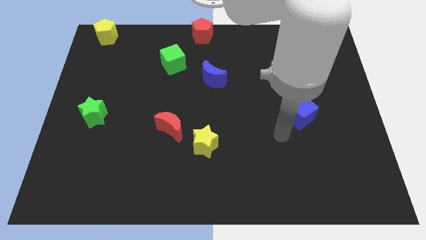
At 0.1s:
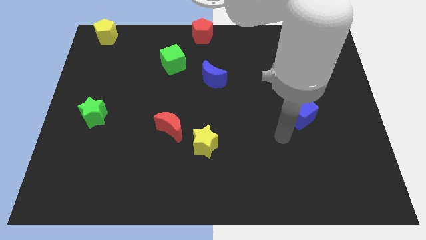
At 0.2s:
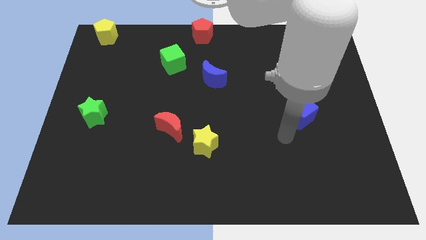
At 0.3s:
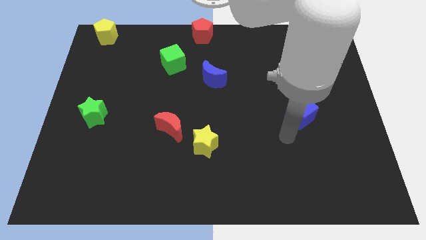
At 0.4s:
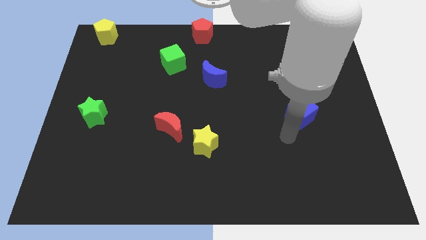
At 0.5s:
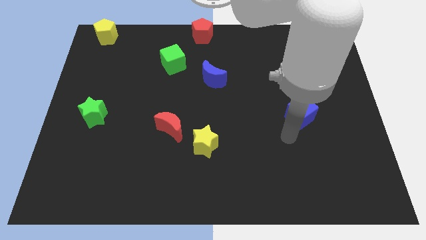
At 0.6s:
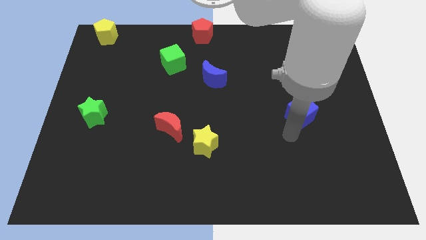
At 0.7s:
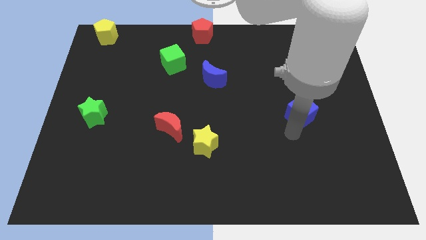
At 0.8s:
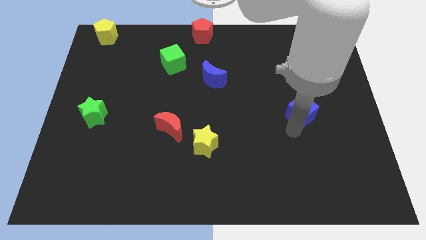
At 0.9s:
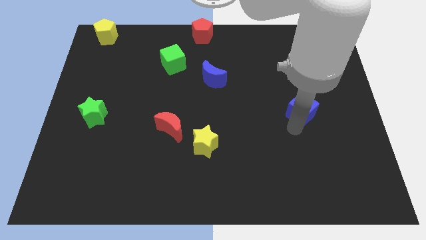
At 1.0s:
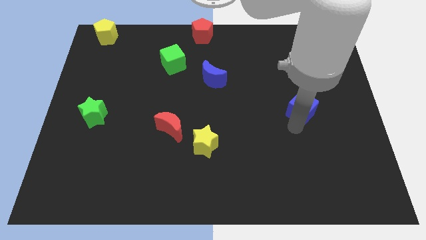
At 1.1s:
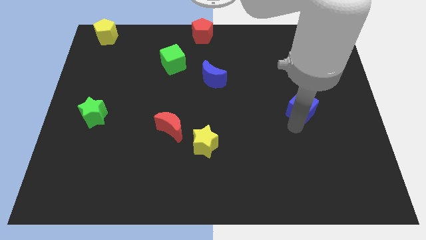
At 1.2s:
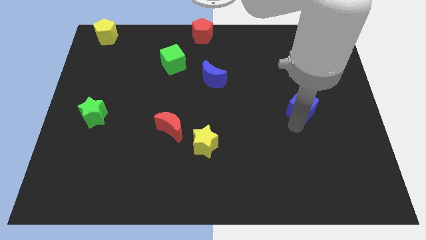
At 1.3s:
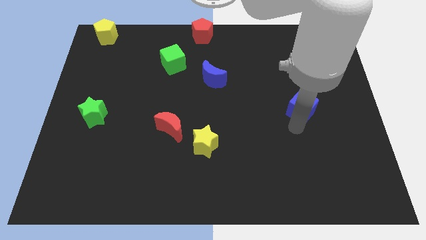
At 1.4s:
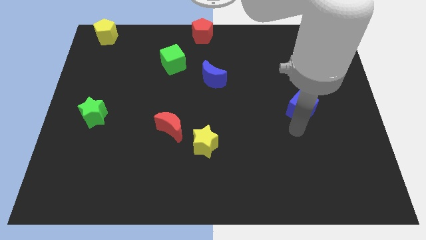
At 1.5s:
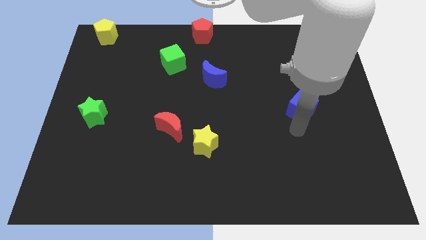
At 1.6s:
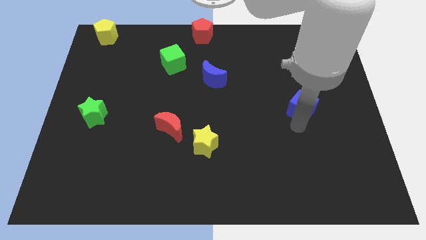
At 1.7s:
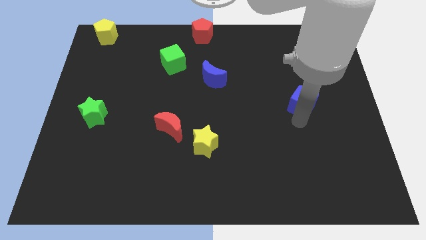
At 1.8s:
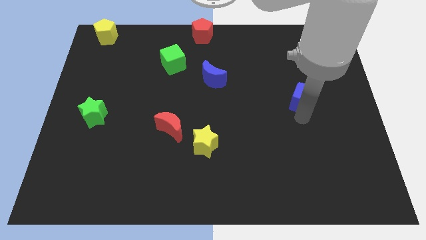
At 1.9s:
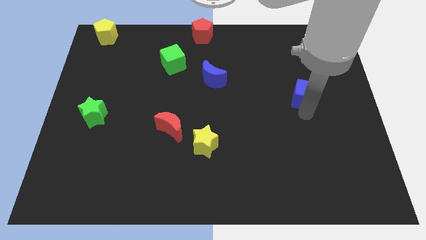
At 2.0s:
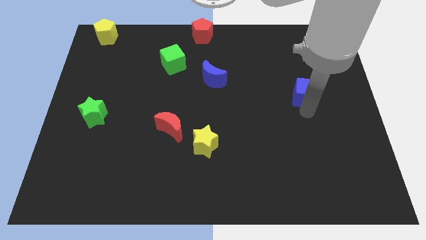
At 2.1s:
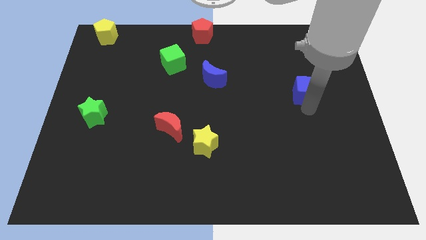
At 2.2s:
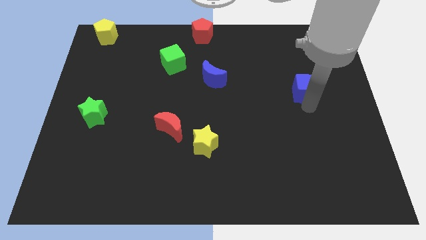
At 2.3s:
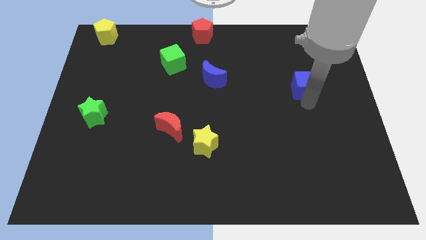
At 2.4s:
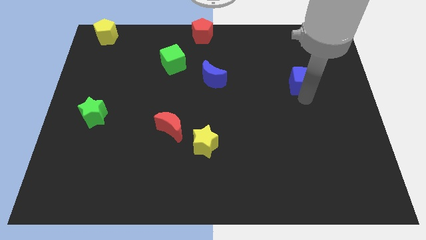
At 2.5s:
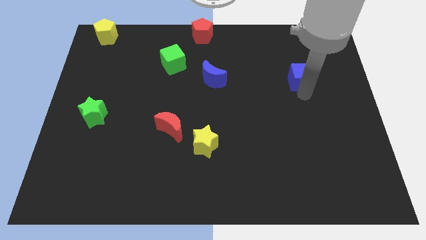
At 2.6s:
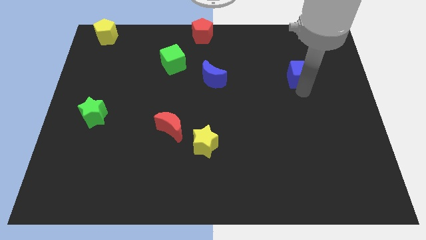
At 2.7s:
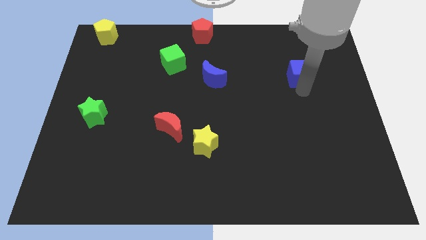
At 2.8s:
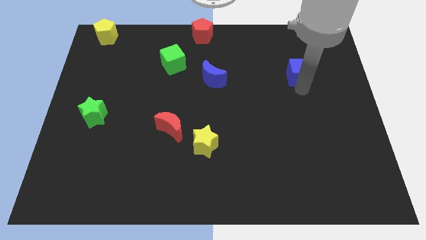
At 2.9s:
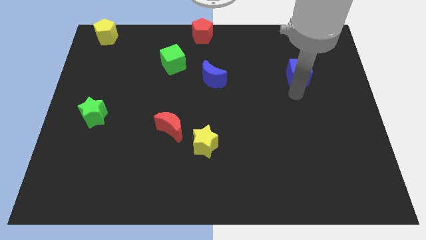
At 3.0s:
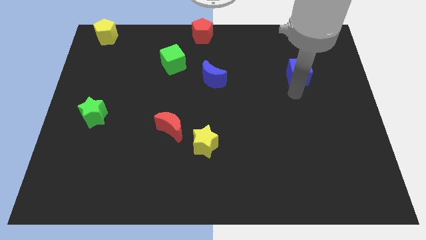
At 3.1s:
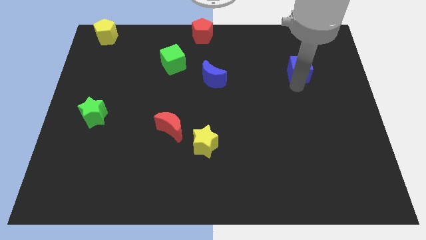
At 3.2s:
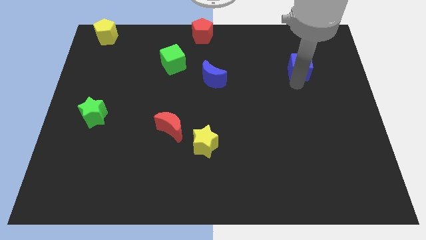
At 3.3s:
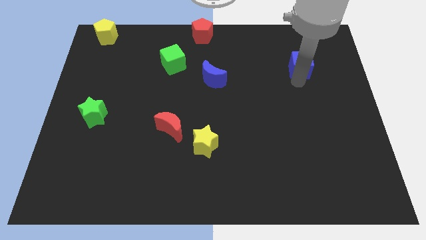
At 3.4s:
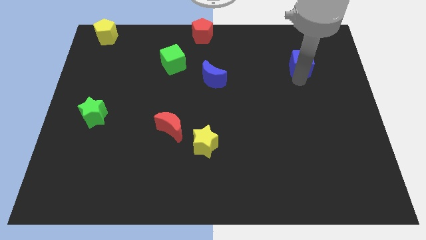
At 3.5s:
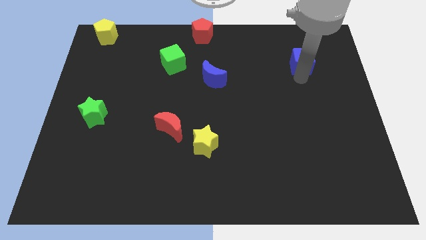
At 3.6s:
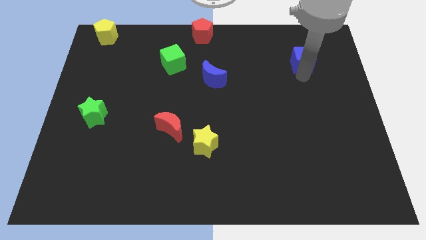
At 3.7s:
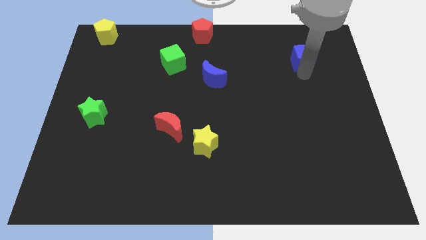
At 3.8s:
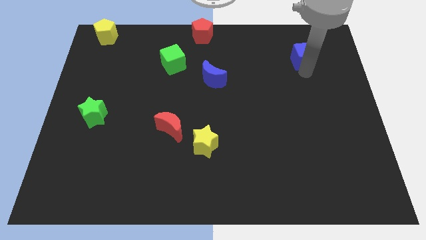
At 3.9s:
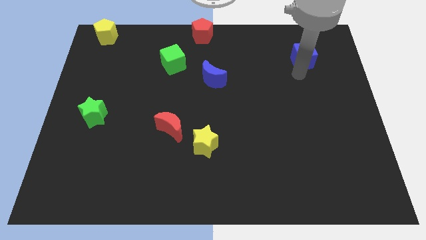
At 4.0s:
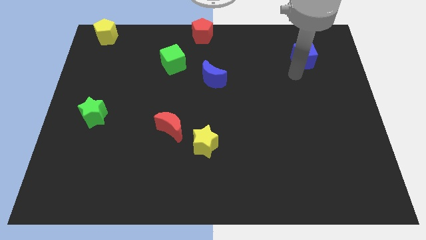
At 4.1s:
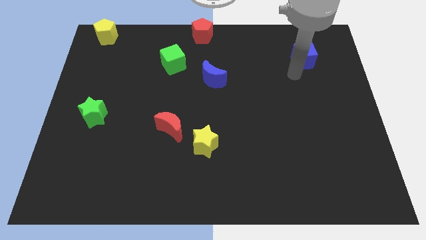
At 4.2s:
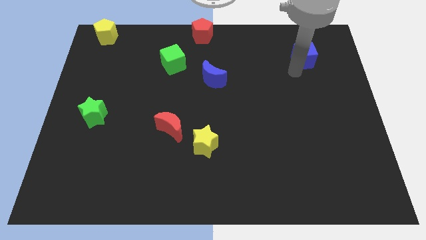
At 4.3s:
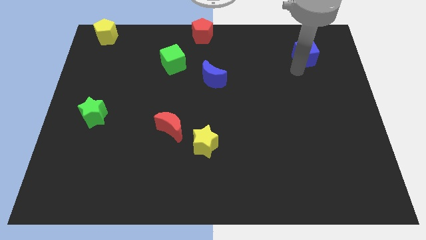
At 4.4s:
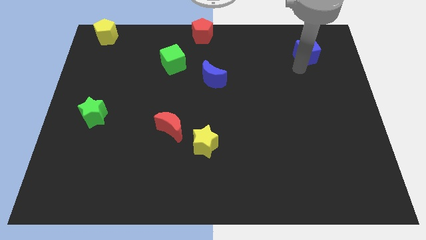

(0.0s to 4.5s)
slide the blue cube towards the top right side of the board

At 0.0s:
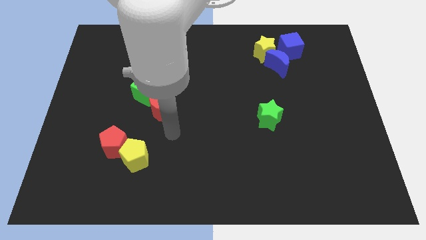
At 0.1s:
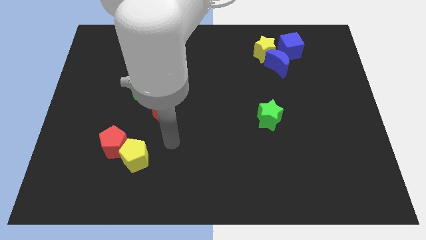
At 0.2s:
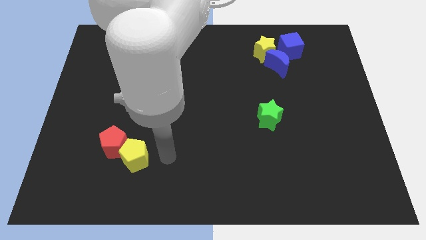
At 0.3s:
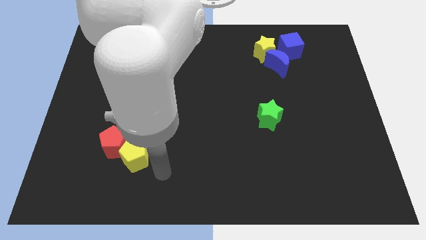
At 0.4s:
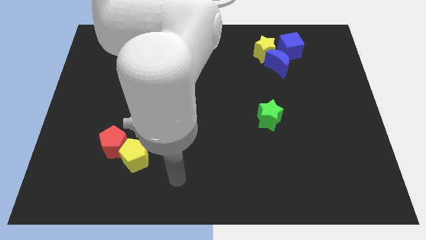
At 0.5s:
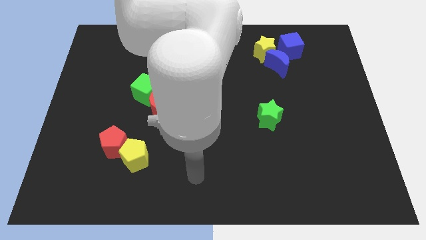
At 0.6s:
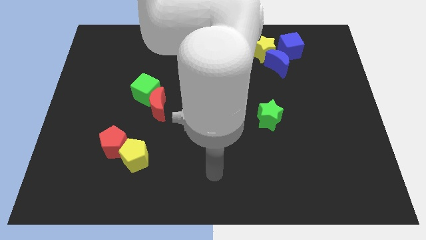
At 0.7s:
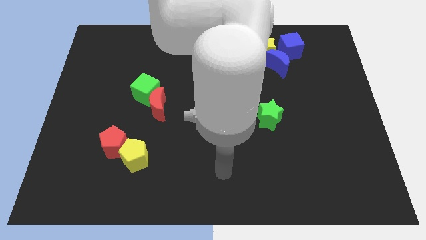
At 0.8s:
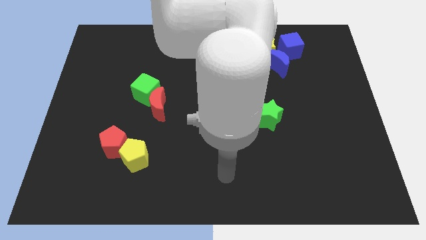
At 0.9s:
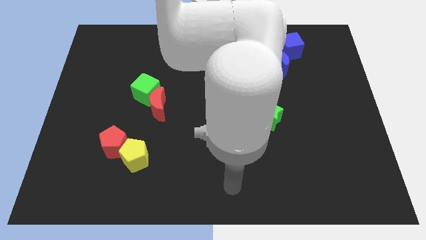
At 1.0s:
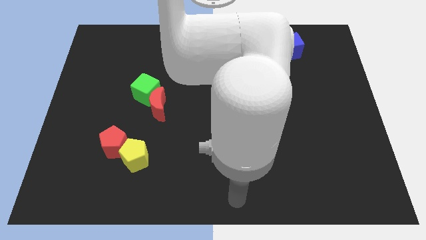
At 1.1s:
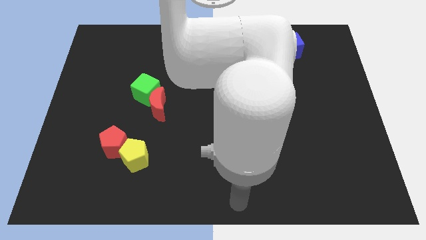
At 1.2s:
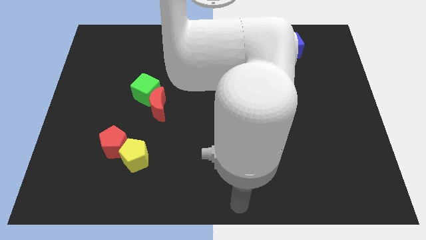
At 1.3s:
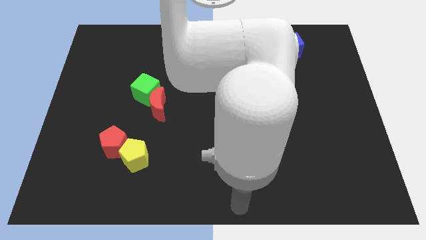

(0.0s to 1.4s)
point the arm at the bottom center of the board

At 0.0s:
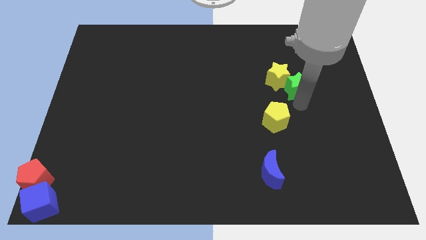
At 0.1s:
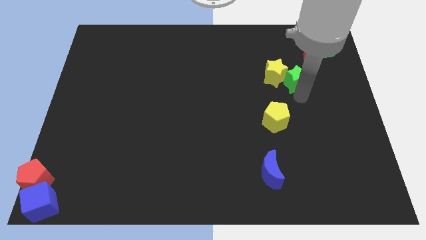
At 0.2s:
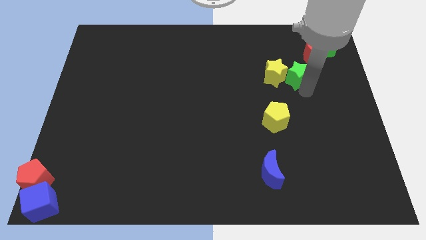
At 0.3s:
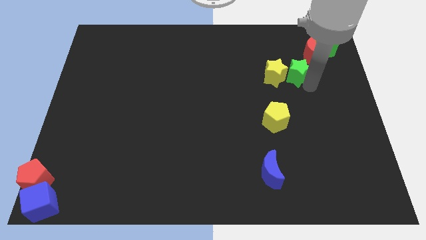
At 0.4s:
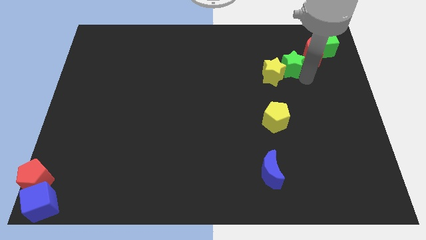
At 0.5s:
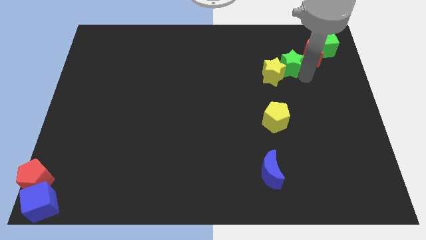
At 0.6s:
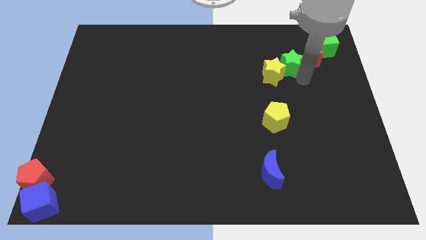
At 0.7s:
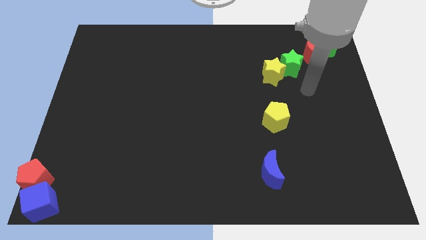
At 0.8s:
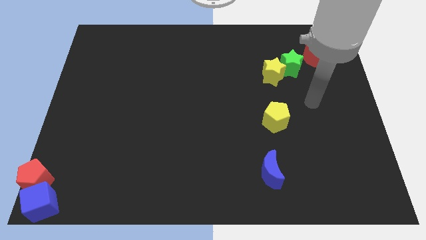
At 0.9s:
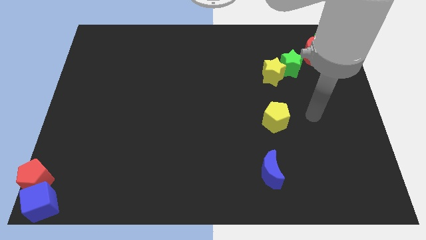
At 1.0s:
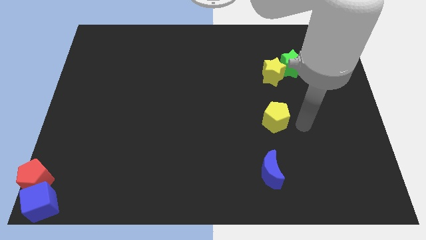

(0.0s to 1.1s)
place the green star diagonally top right to the red moon

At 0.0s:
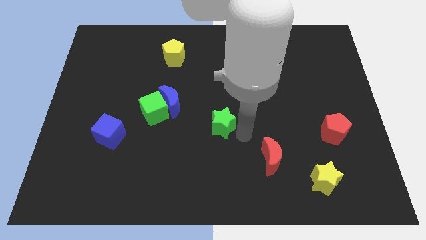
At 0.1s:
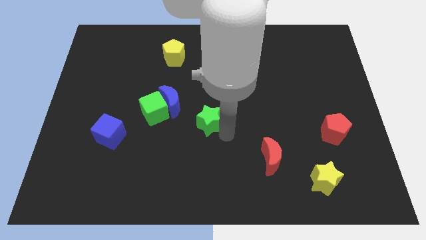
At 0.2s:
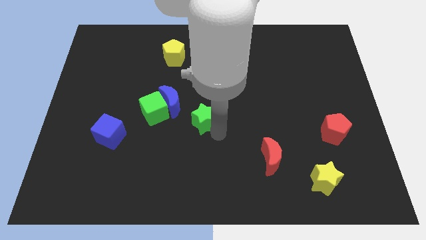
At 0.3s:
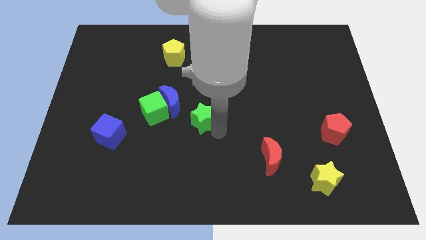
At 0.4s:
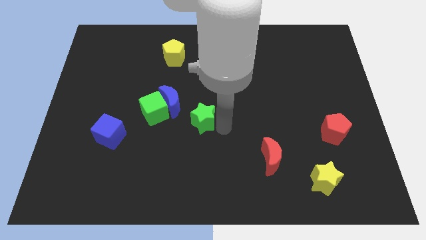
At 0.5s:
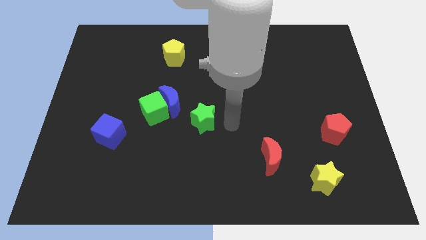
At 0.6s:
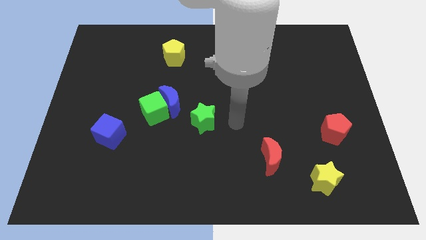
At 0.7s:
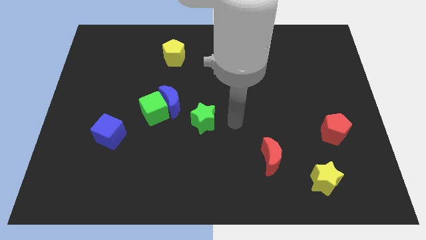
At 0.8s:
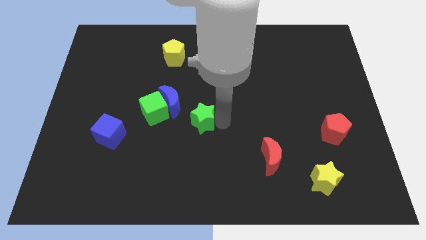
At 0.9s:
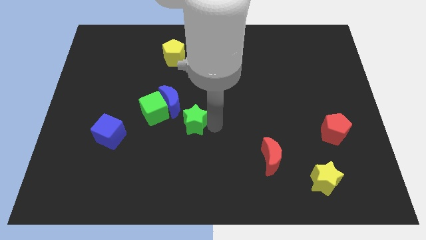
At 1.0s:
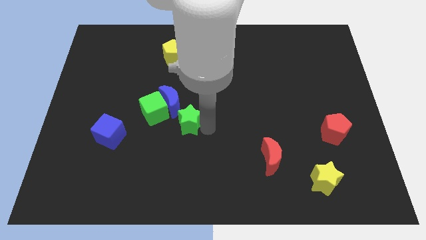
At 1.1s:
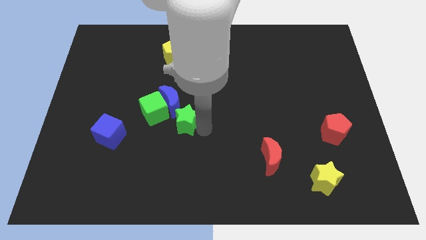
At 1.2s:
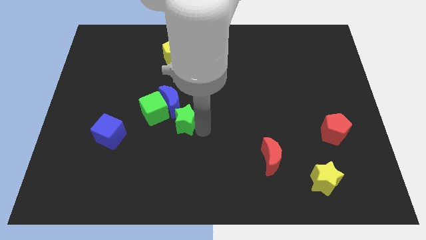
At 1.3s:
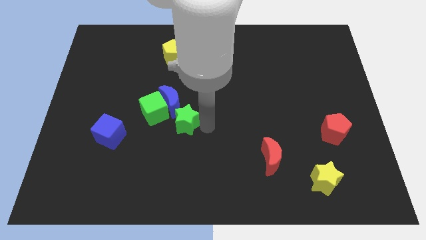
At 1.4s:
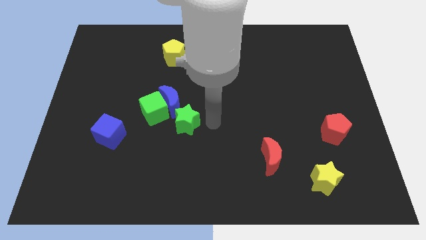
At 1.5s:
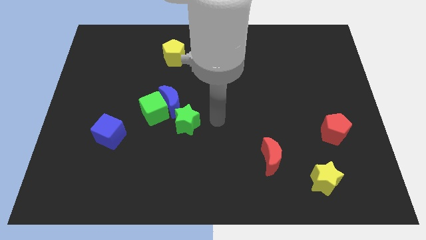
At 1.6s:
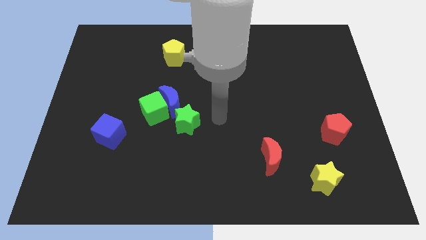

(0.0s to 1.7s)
push the green star slightly towards the green cube

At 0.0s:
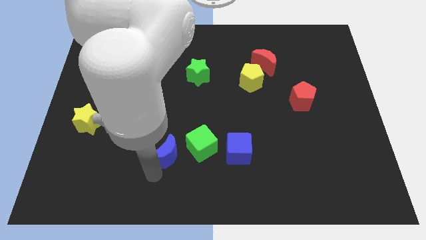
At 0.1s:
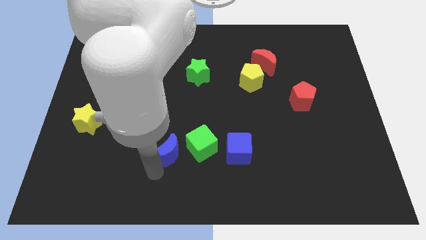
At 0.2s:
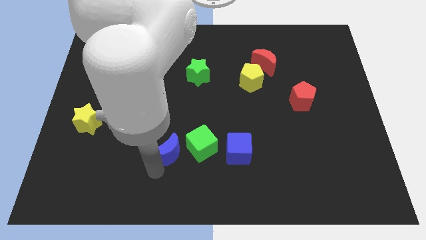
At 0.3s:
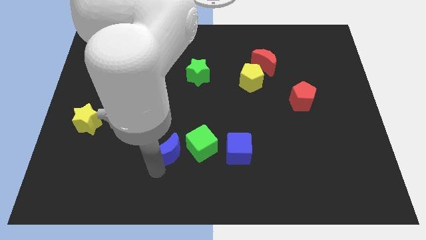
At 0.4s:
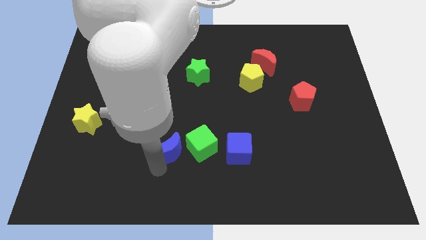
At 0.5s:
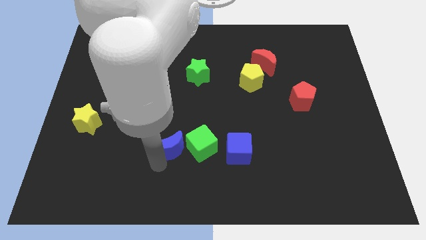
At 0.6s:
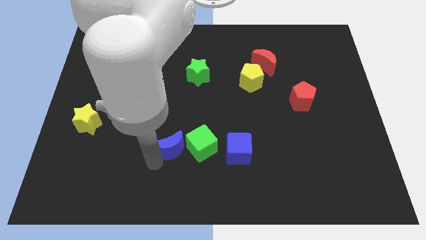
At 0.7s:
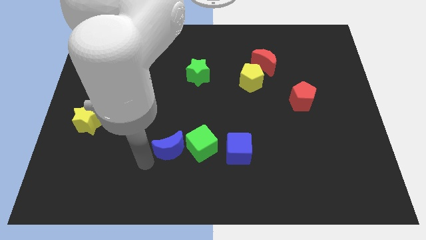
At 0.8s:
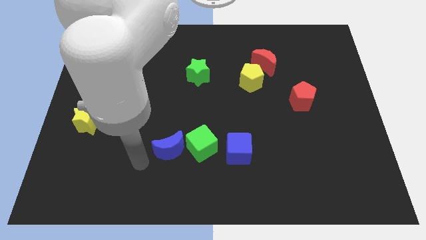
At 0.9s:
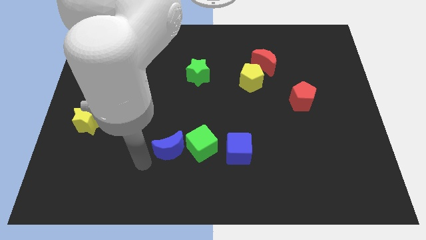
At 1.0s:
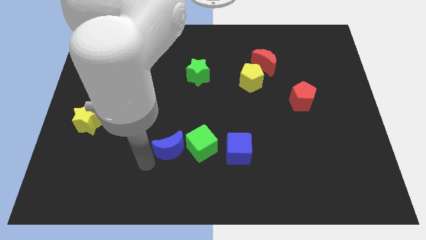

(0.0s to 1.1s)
push blue moon into green cube
